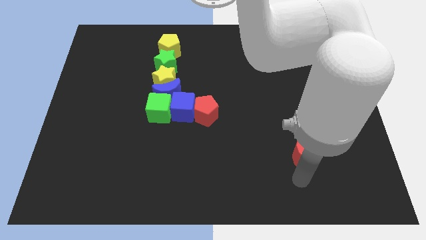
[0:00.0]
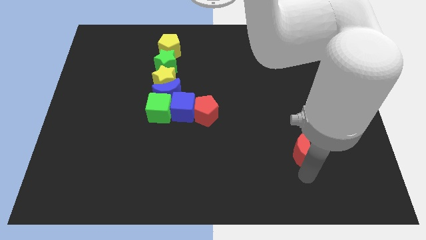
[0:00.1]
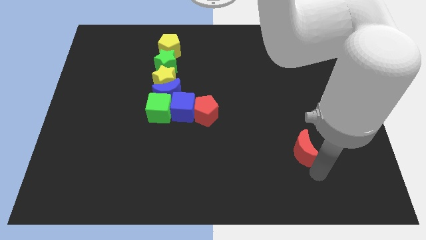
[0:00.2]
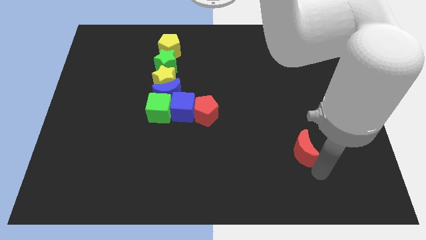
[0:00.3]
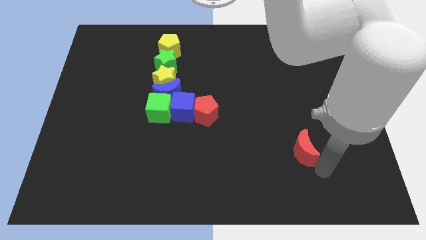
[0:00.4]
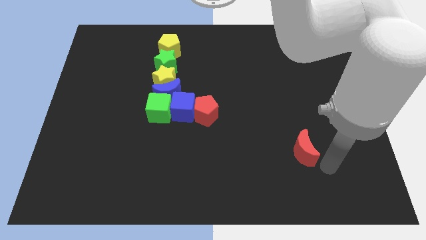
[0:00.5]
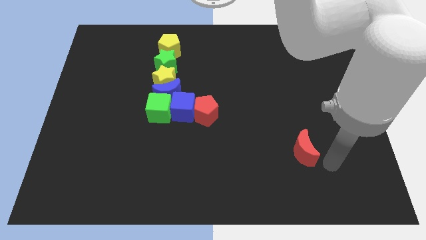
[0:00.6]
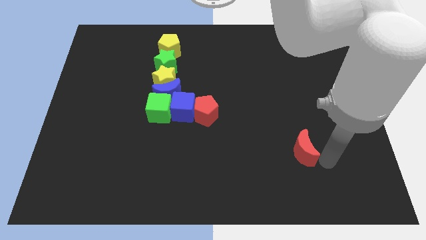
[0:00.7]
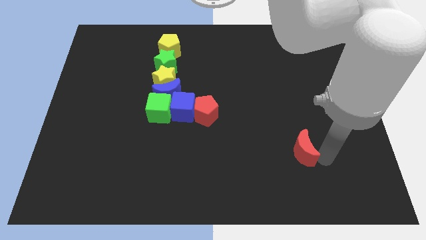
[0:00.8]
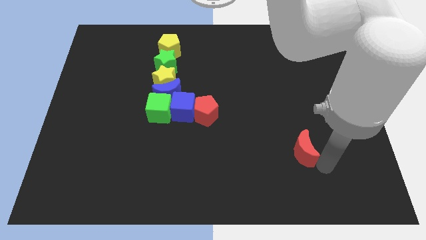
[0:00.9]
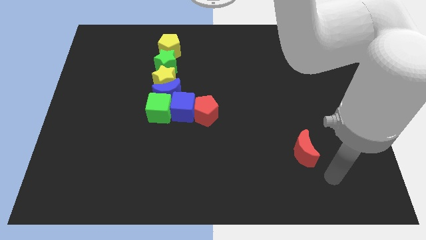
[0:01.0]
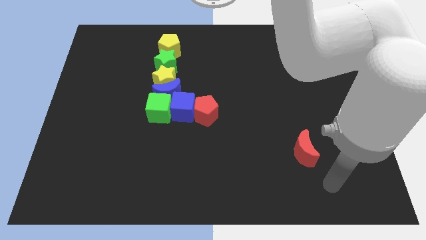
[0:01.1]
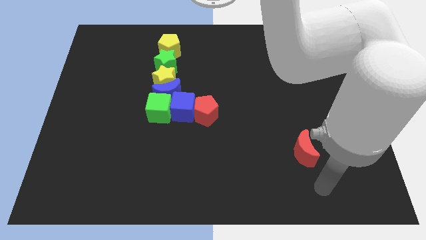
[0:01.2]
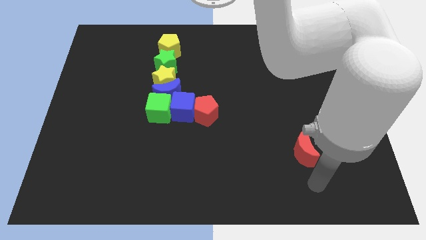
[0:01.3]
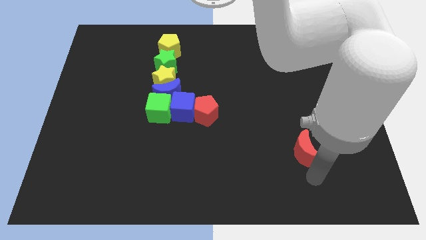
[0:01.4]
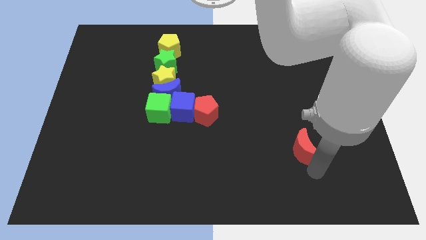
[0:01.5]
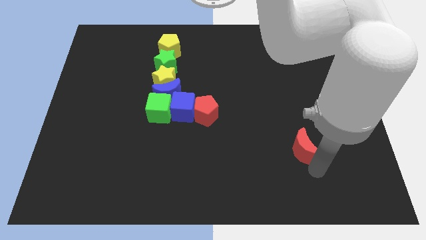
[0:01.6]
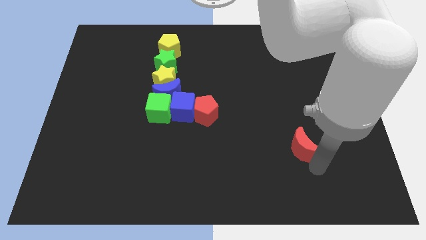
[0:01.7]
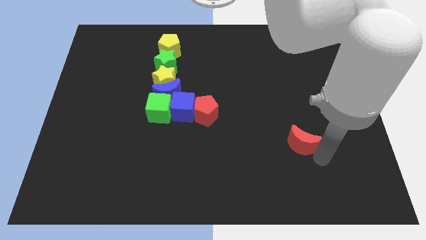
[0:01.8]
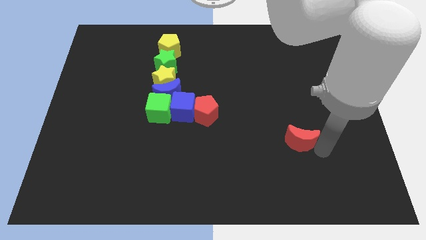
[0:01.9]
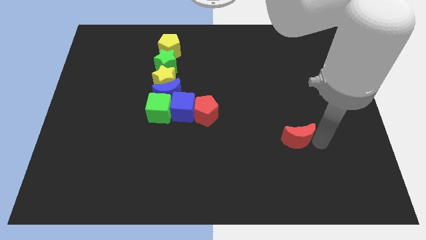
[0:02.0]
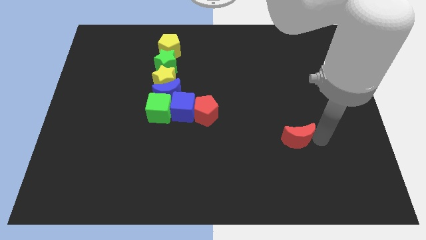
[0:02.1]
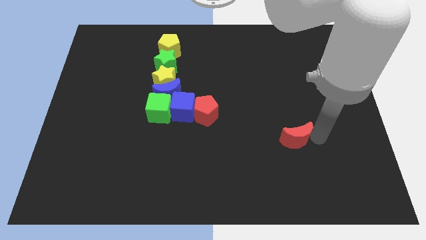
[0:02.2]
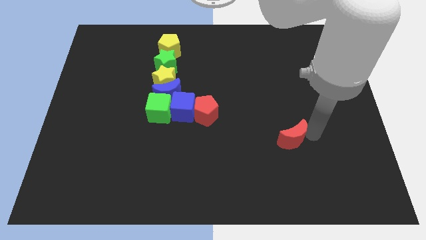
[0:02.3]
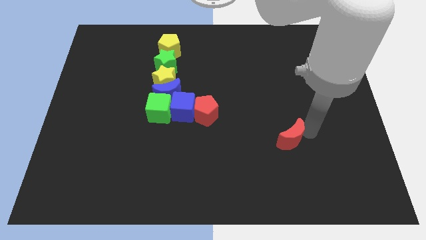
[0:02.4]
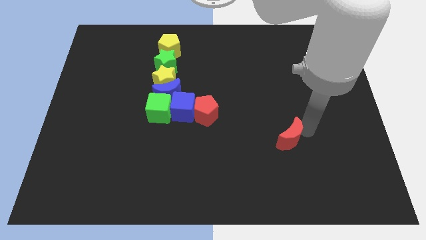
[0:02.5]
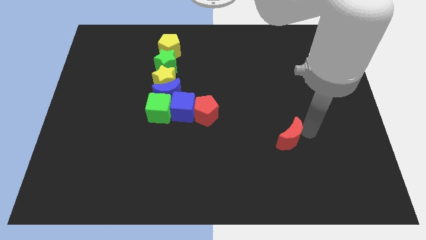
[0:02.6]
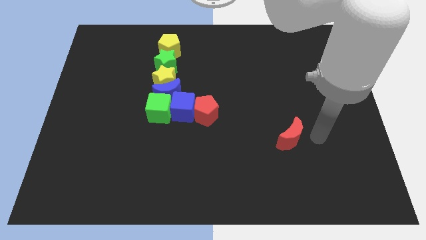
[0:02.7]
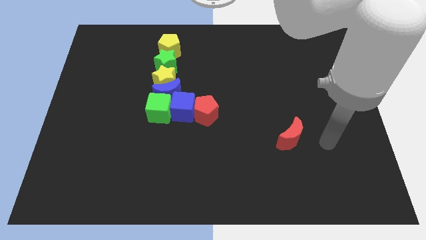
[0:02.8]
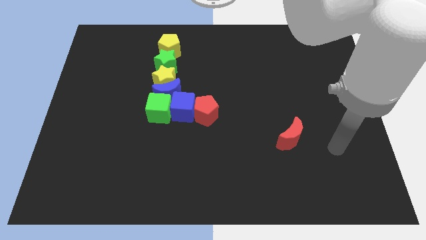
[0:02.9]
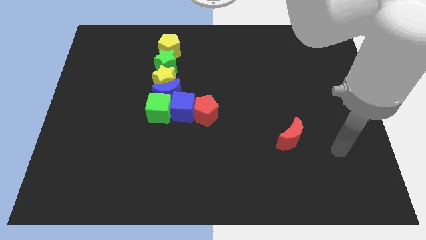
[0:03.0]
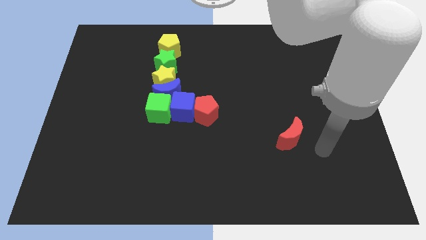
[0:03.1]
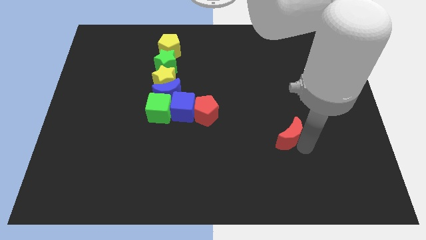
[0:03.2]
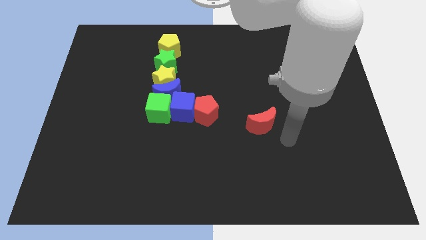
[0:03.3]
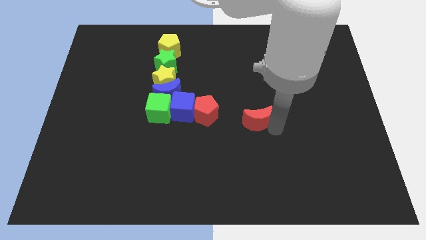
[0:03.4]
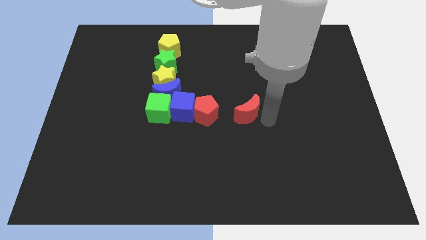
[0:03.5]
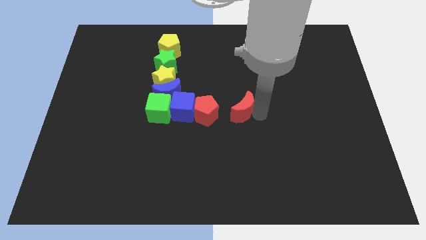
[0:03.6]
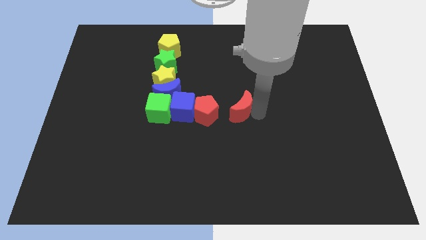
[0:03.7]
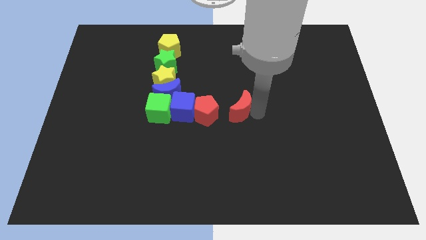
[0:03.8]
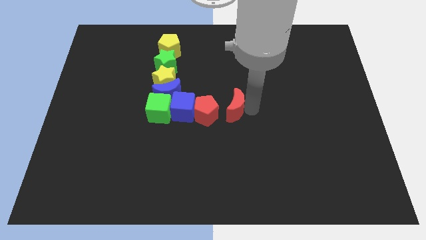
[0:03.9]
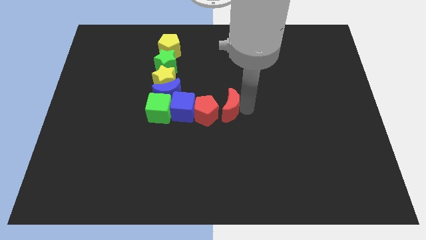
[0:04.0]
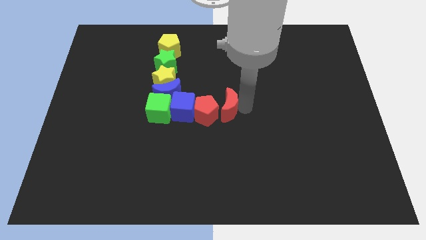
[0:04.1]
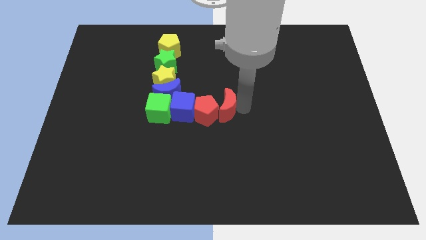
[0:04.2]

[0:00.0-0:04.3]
place the red moon right to the red pentagon

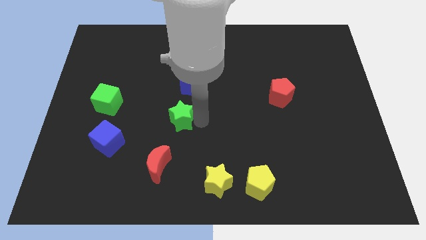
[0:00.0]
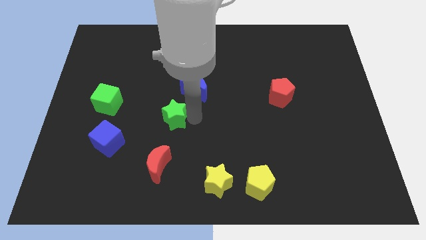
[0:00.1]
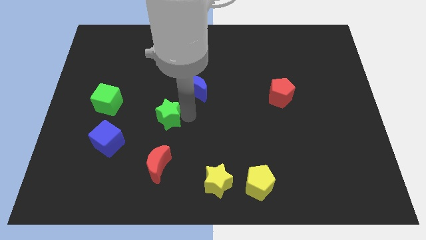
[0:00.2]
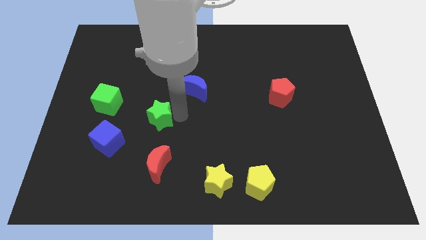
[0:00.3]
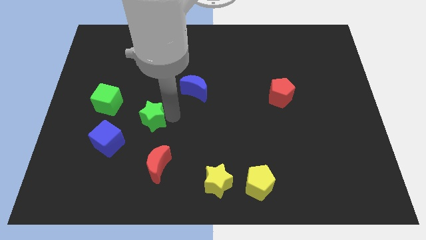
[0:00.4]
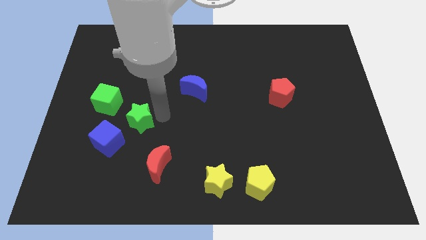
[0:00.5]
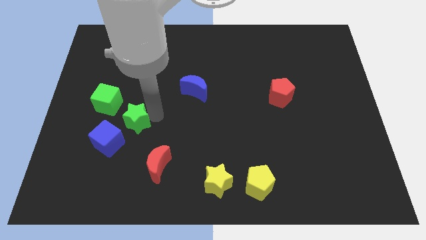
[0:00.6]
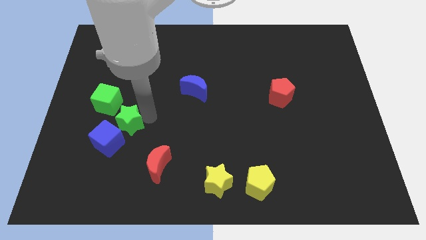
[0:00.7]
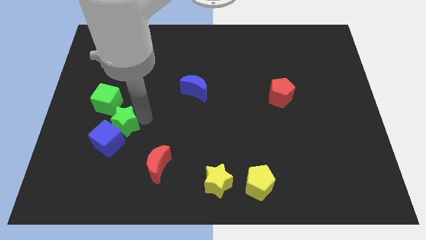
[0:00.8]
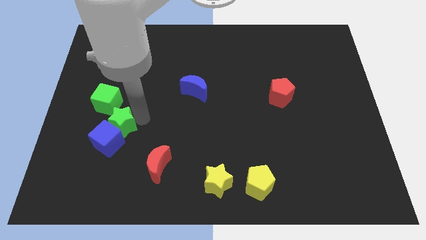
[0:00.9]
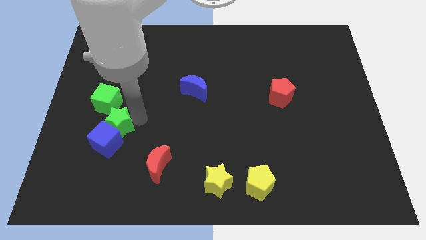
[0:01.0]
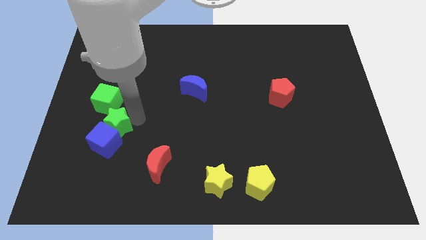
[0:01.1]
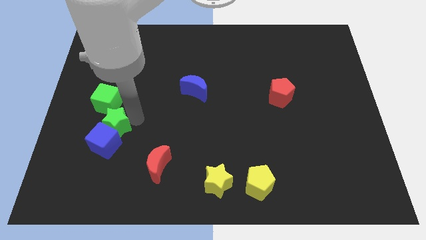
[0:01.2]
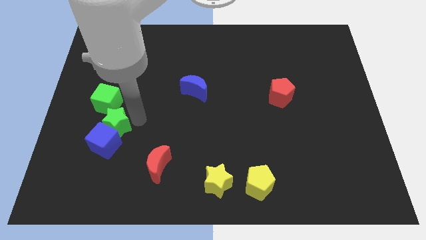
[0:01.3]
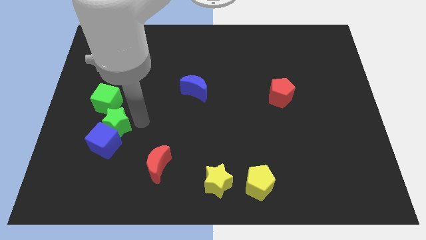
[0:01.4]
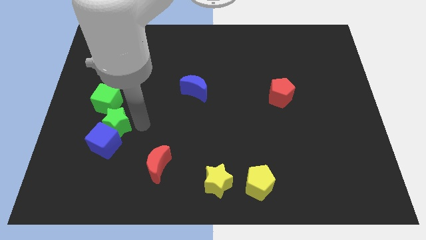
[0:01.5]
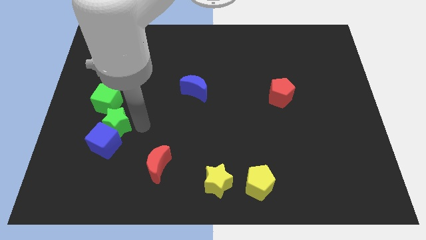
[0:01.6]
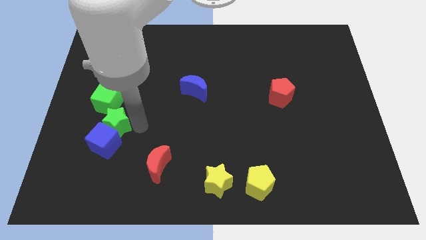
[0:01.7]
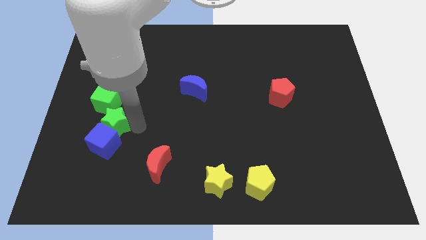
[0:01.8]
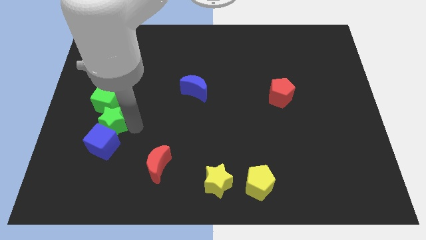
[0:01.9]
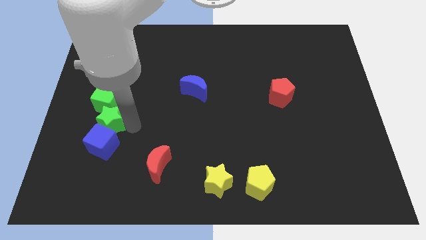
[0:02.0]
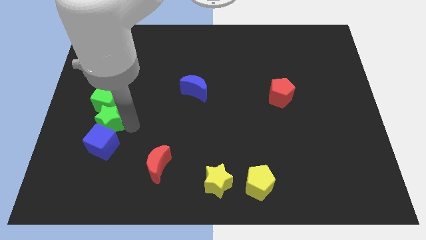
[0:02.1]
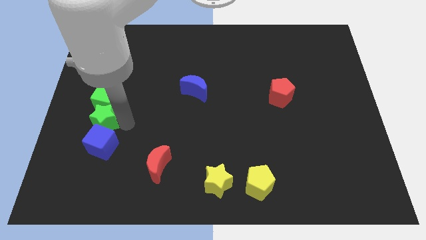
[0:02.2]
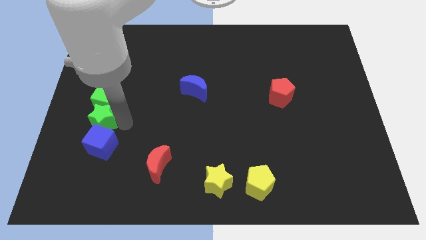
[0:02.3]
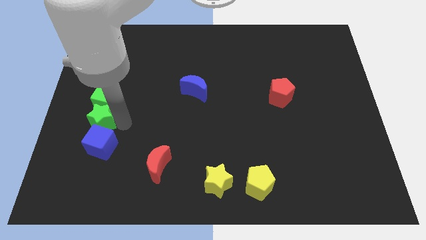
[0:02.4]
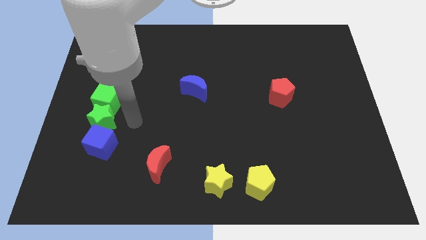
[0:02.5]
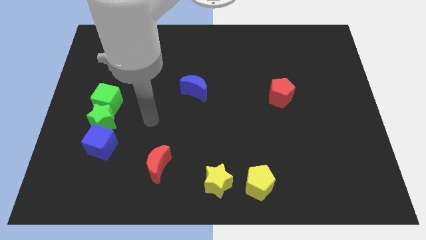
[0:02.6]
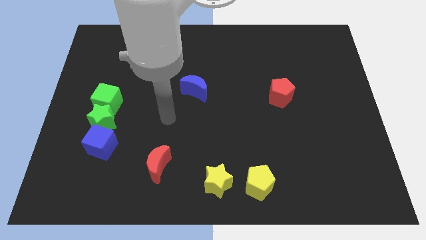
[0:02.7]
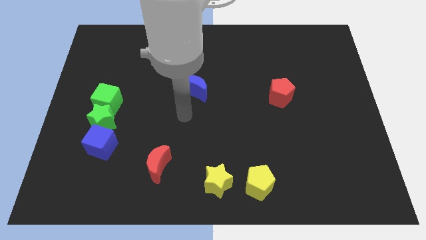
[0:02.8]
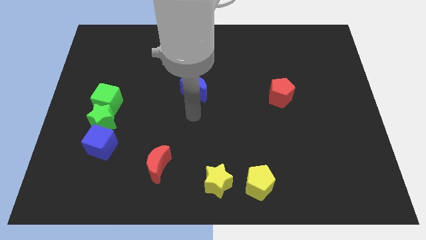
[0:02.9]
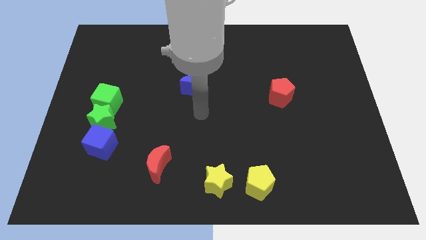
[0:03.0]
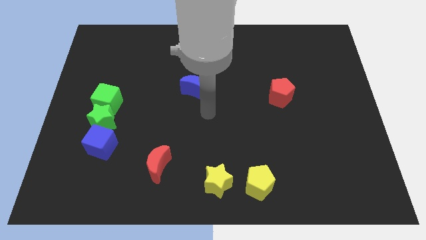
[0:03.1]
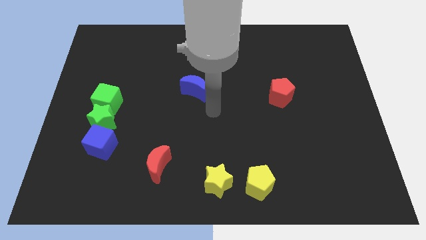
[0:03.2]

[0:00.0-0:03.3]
drag the green star into the blue and the green cube

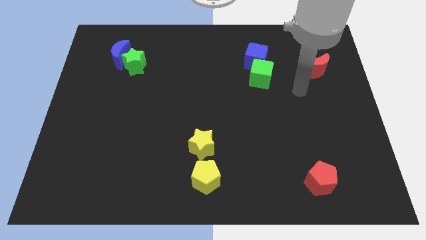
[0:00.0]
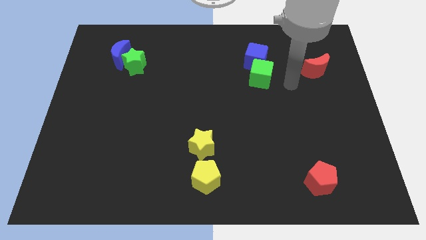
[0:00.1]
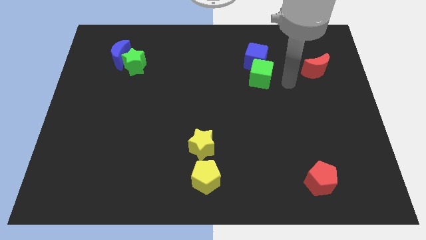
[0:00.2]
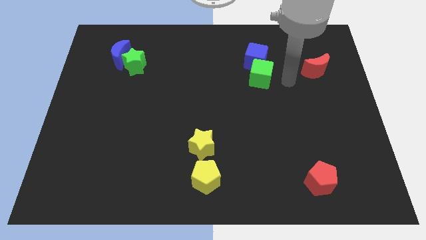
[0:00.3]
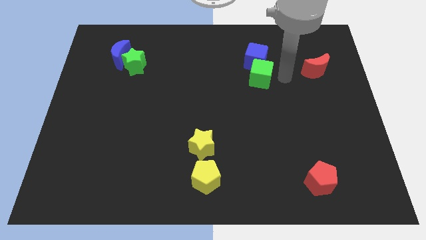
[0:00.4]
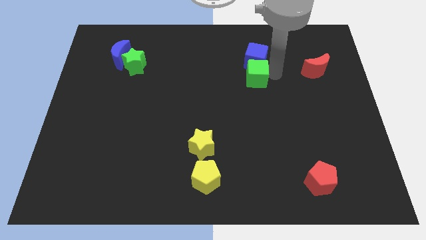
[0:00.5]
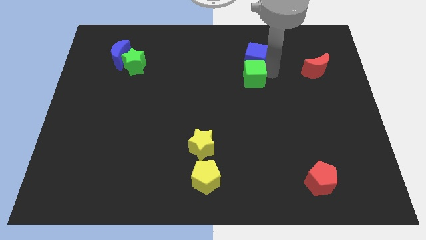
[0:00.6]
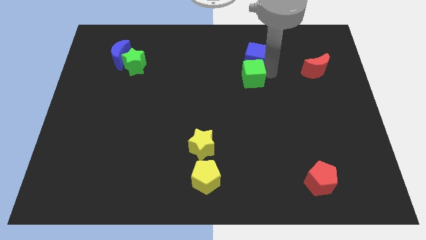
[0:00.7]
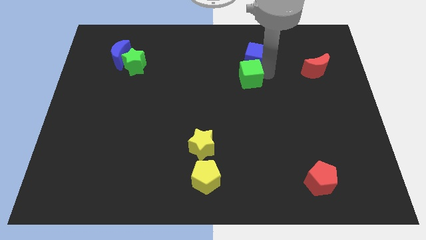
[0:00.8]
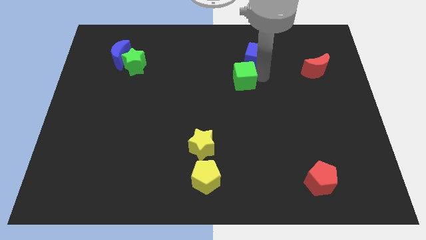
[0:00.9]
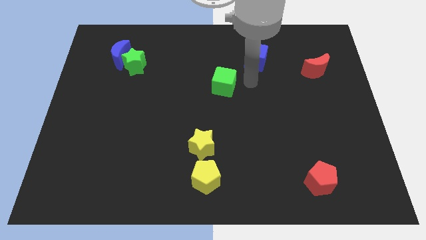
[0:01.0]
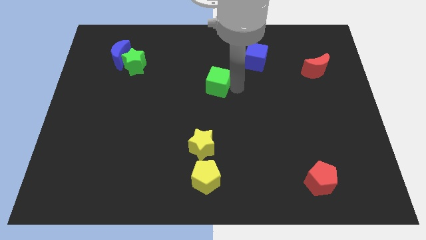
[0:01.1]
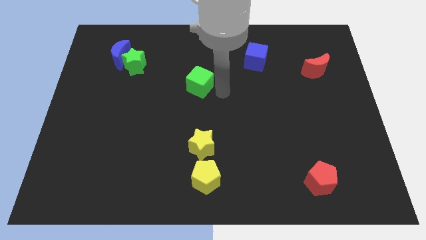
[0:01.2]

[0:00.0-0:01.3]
move the green cube slightly left
